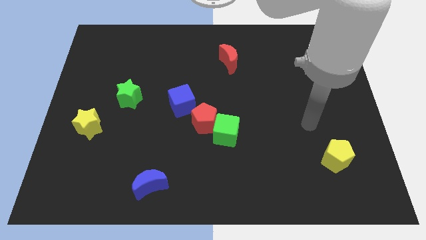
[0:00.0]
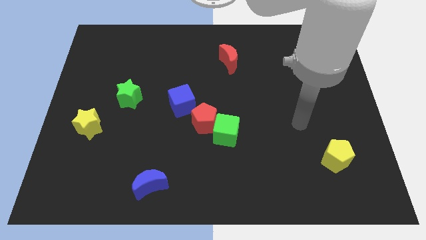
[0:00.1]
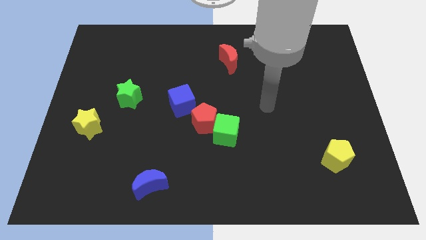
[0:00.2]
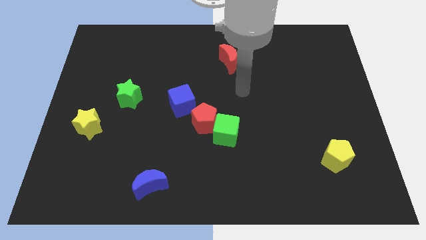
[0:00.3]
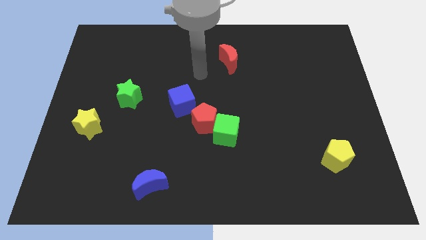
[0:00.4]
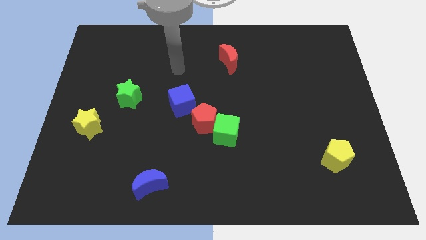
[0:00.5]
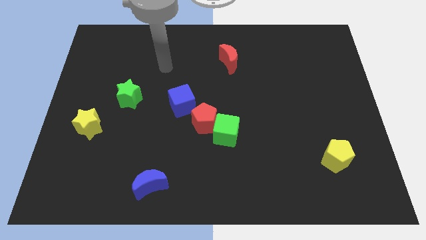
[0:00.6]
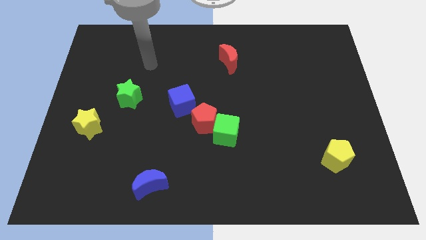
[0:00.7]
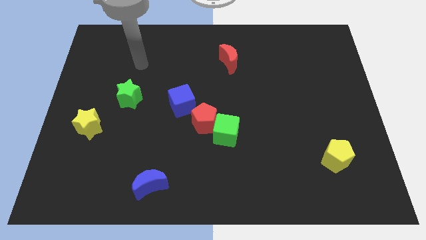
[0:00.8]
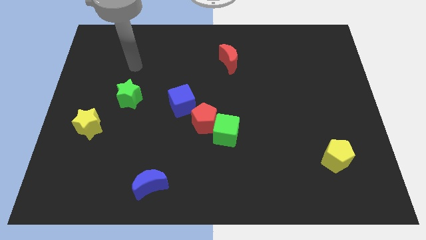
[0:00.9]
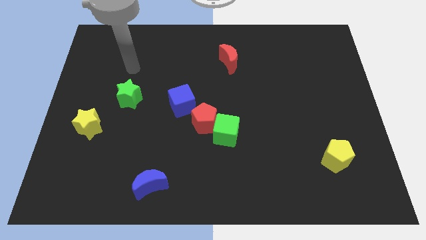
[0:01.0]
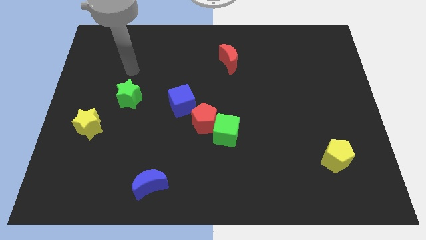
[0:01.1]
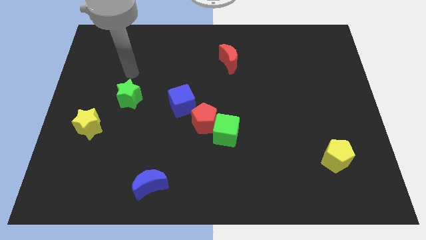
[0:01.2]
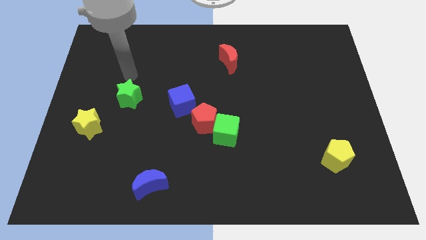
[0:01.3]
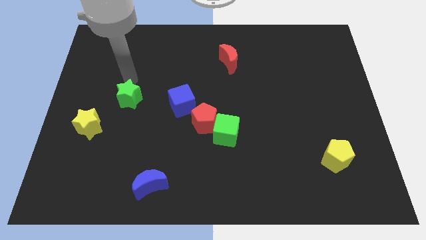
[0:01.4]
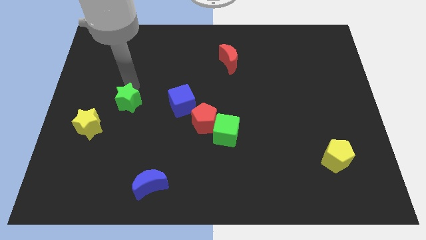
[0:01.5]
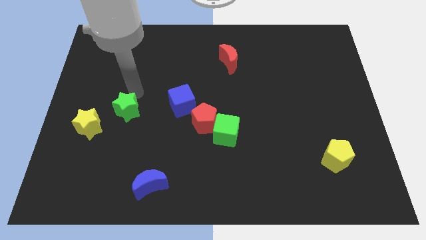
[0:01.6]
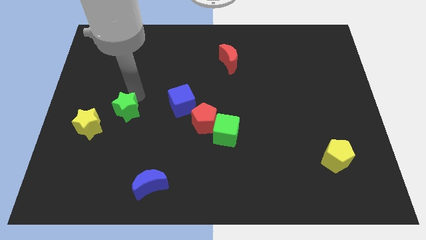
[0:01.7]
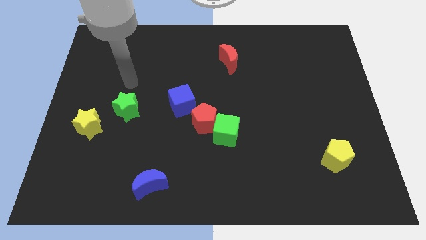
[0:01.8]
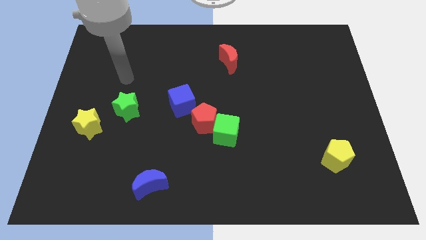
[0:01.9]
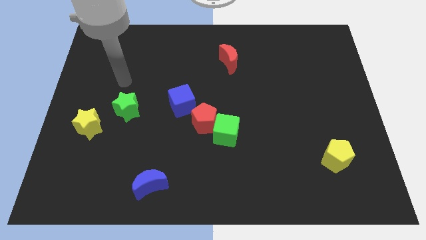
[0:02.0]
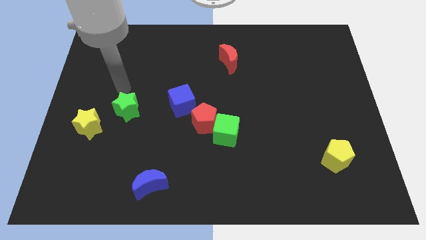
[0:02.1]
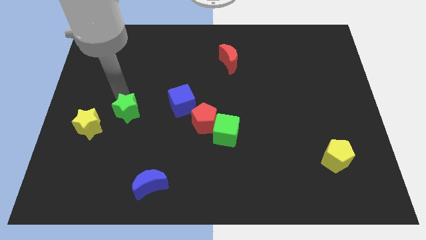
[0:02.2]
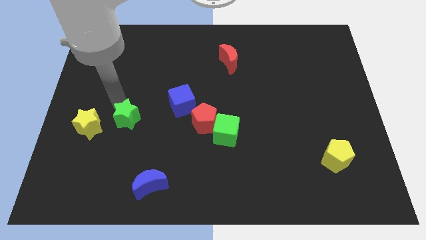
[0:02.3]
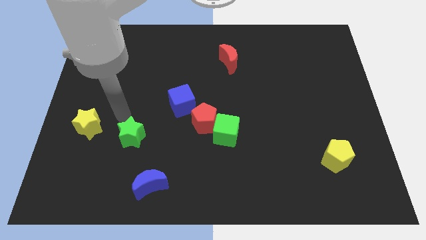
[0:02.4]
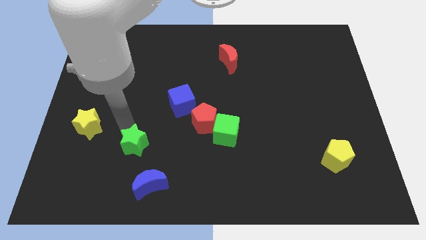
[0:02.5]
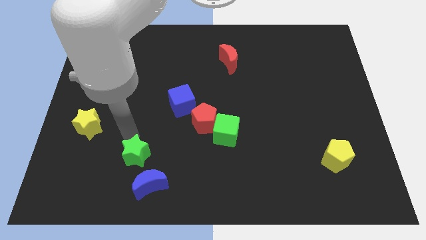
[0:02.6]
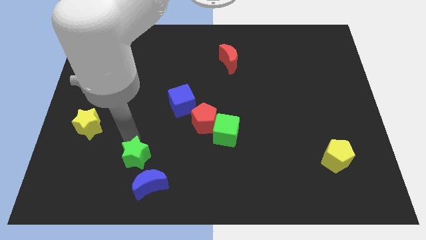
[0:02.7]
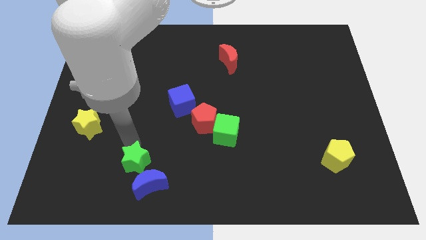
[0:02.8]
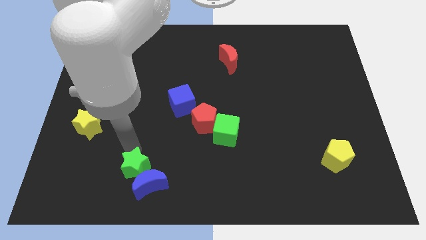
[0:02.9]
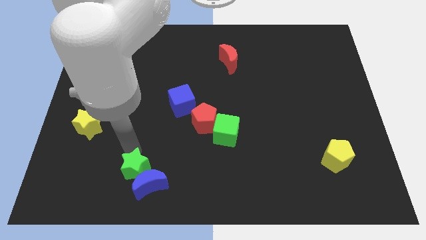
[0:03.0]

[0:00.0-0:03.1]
slide the green star towards the blue moon

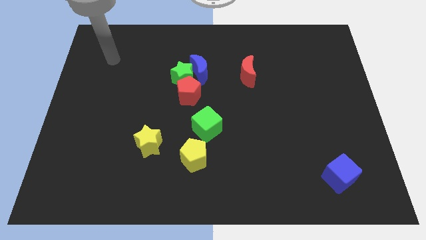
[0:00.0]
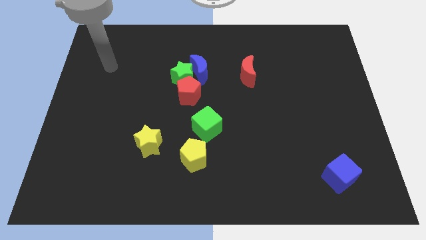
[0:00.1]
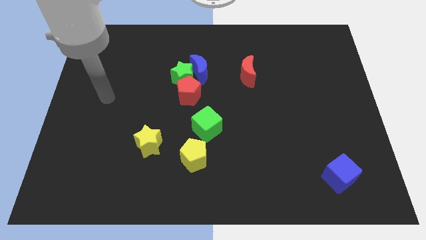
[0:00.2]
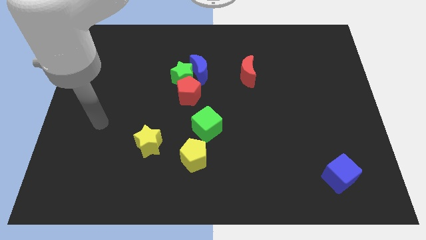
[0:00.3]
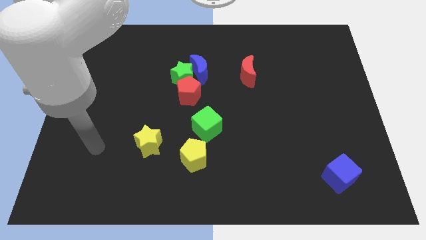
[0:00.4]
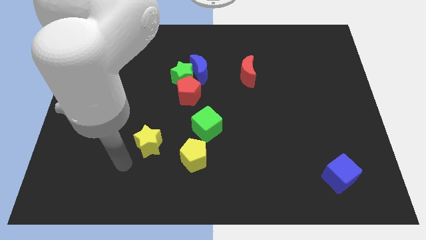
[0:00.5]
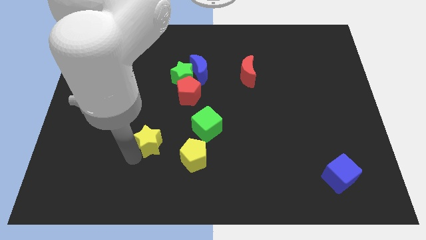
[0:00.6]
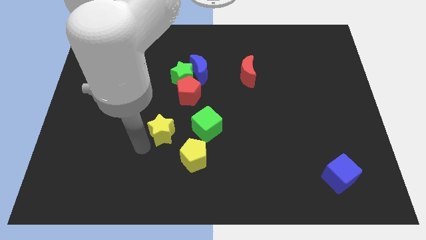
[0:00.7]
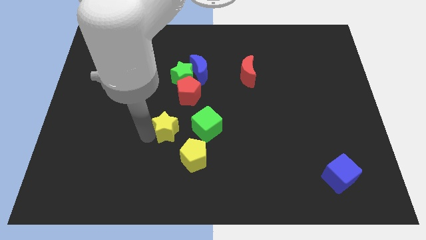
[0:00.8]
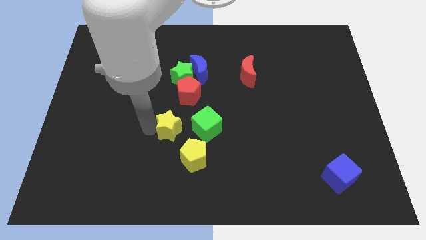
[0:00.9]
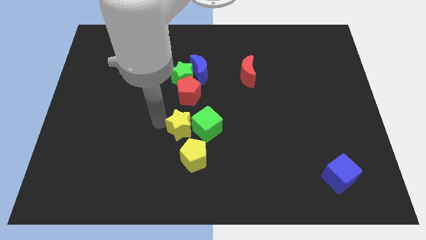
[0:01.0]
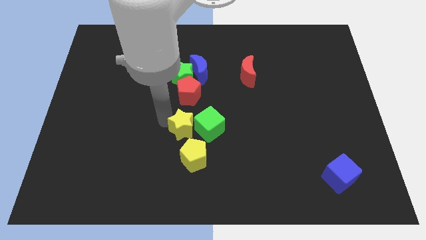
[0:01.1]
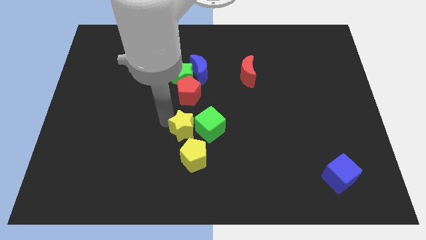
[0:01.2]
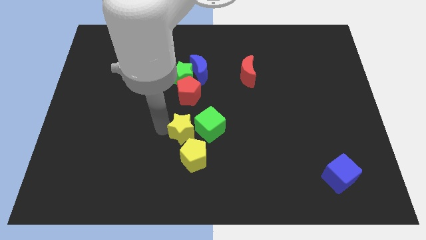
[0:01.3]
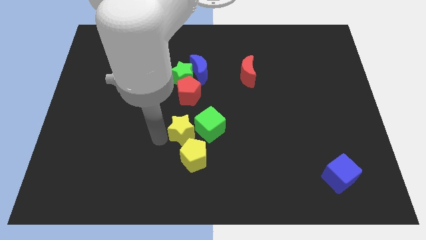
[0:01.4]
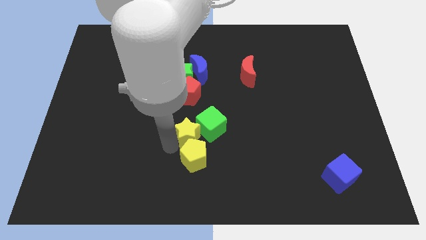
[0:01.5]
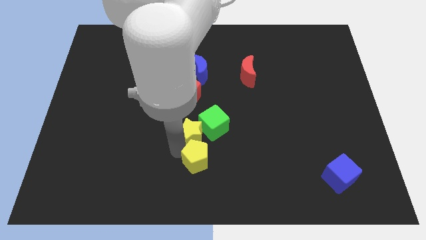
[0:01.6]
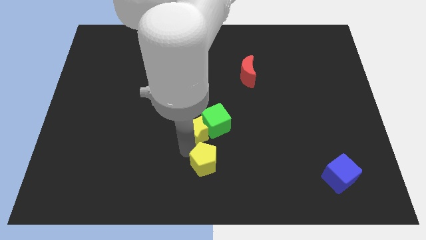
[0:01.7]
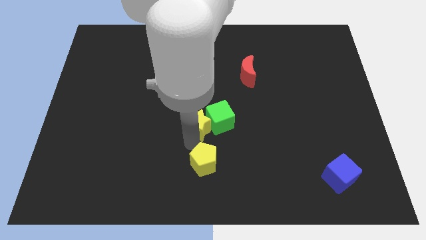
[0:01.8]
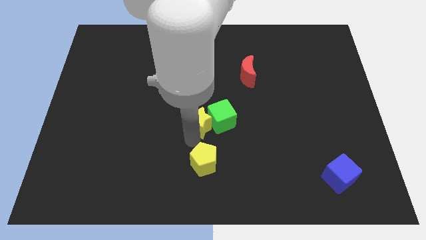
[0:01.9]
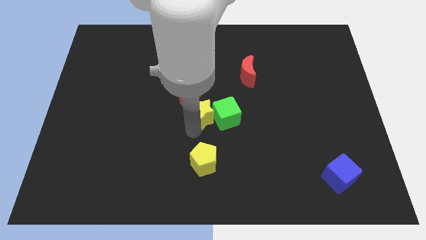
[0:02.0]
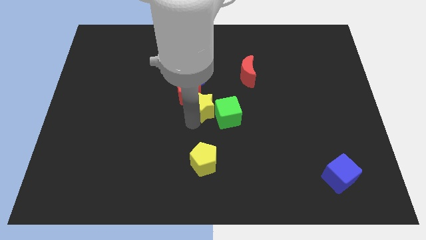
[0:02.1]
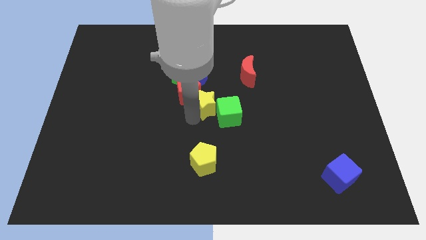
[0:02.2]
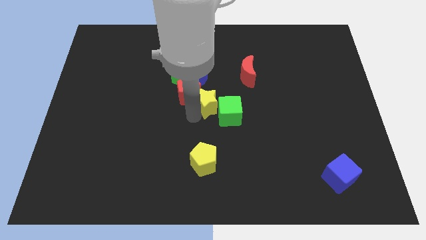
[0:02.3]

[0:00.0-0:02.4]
move the yellow star next to the red pentagon

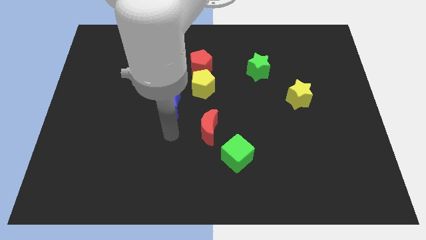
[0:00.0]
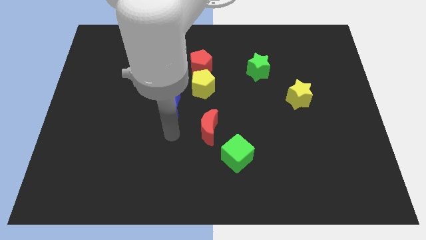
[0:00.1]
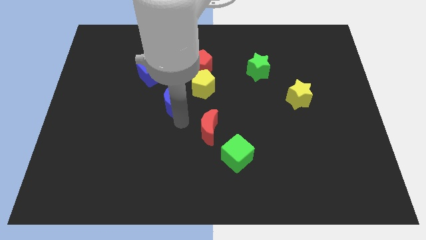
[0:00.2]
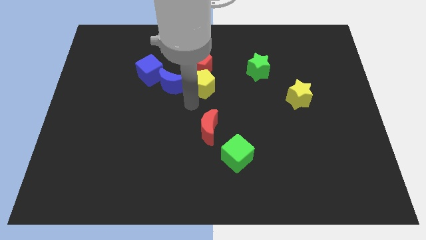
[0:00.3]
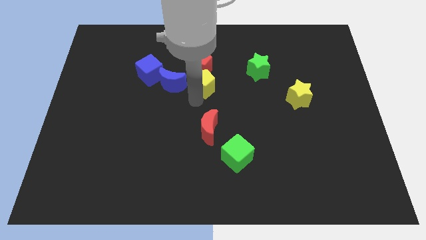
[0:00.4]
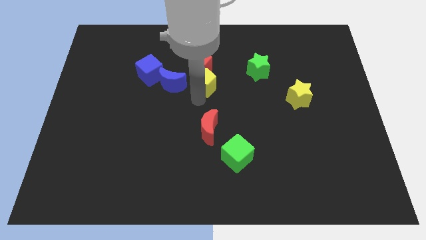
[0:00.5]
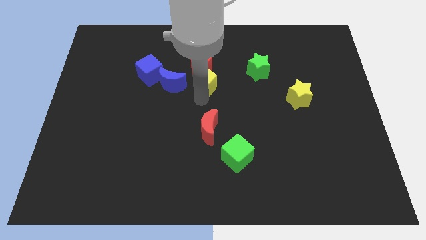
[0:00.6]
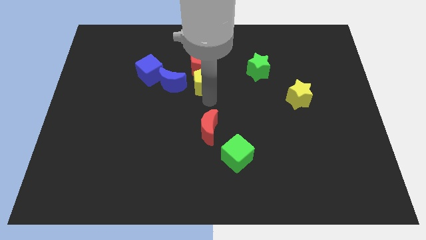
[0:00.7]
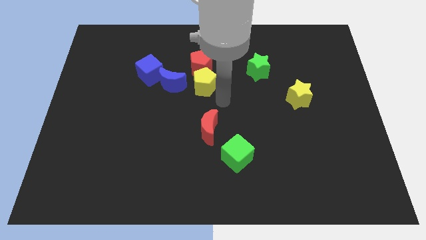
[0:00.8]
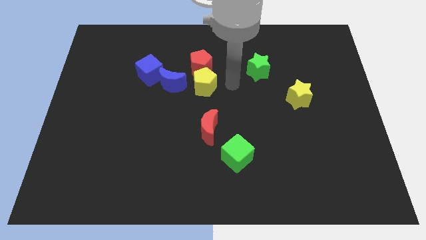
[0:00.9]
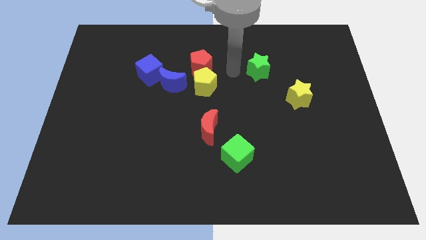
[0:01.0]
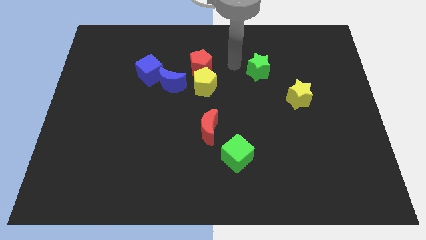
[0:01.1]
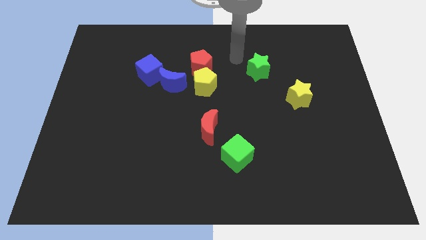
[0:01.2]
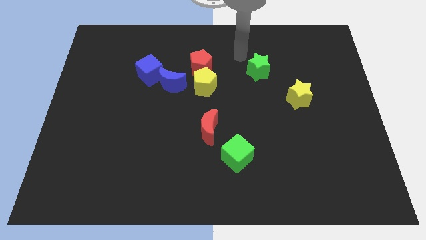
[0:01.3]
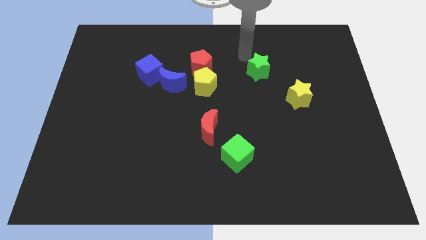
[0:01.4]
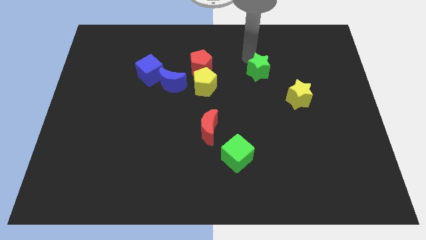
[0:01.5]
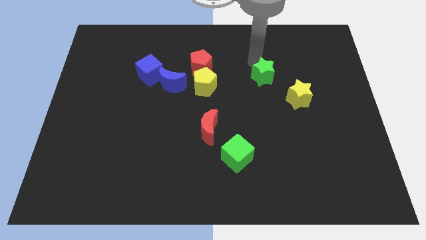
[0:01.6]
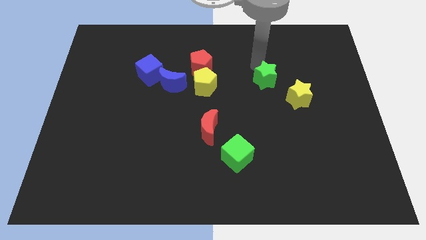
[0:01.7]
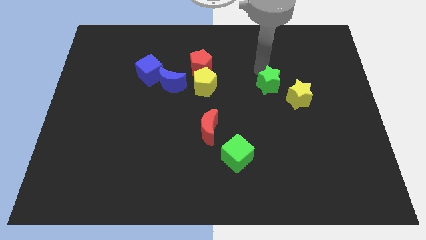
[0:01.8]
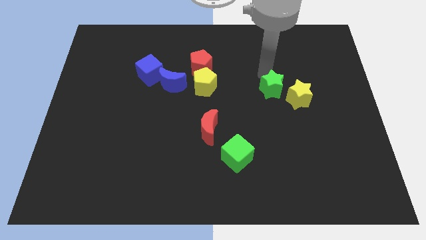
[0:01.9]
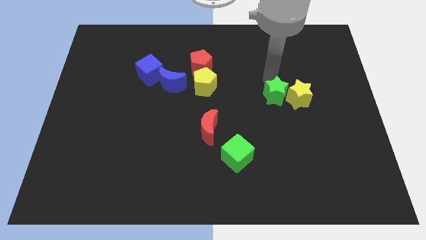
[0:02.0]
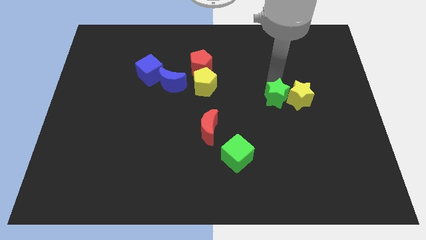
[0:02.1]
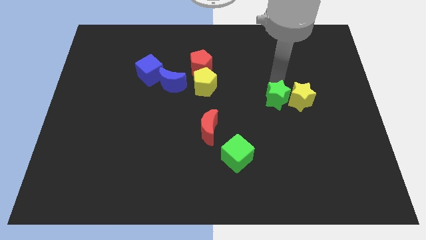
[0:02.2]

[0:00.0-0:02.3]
slide the green star next to the yellow star

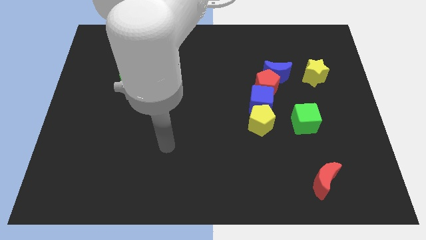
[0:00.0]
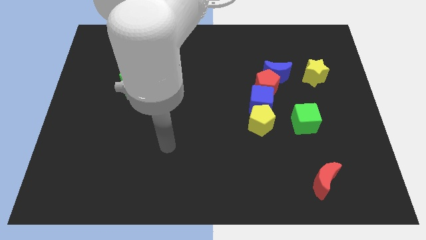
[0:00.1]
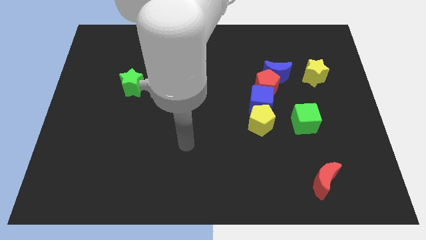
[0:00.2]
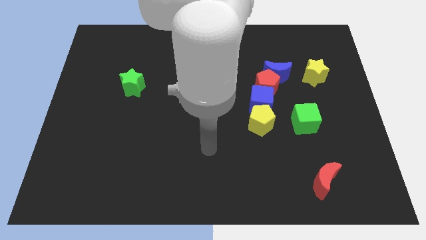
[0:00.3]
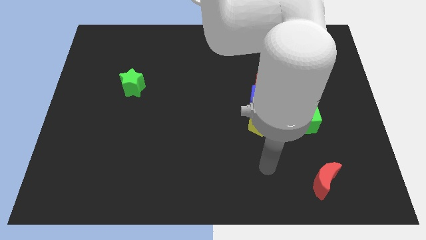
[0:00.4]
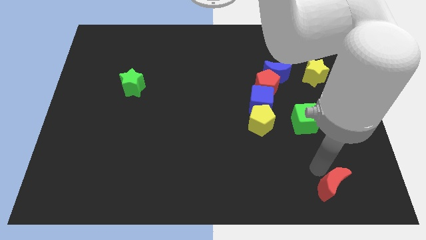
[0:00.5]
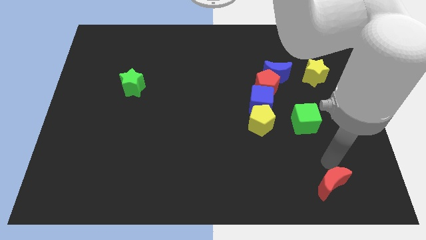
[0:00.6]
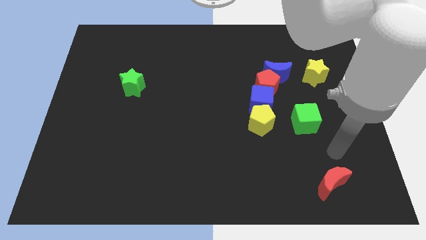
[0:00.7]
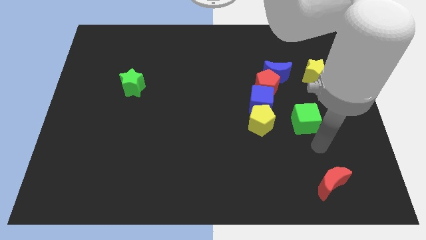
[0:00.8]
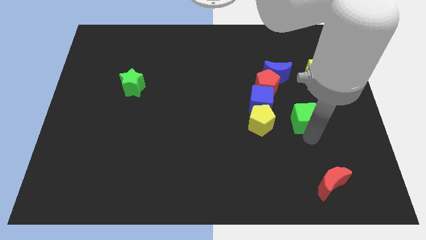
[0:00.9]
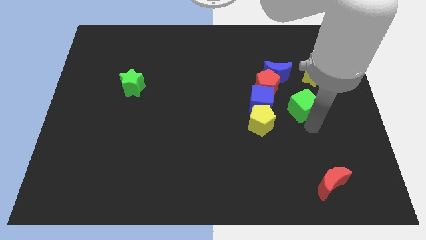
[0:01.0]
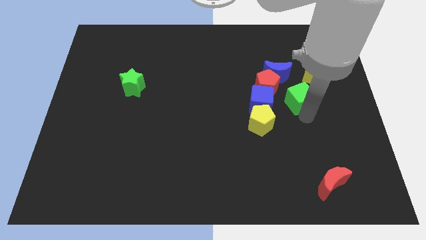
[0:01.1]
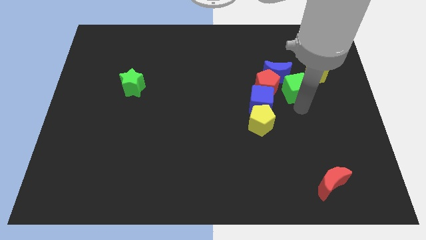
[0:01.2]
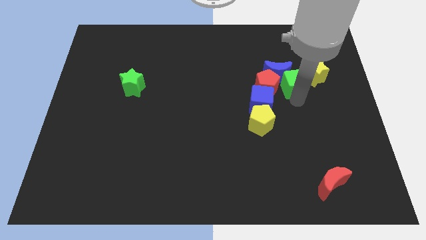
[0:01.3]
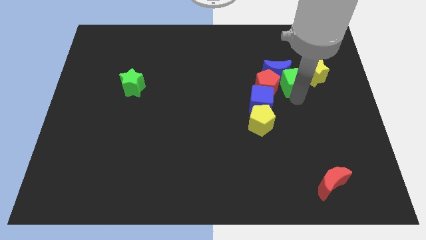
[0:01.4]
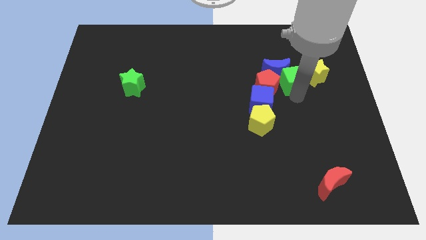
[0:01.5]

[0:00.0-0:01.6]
push the green cube towards the blue moon
